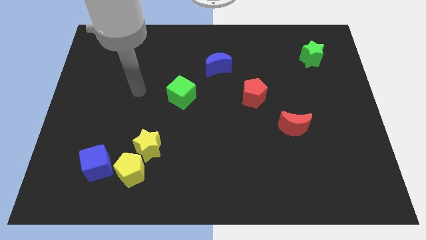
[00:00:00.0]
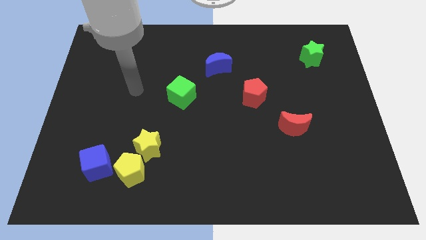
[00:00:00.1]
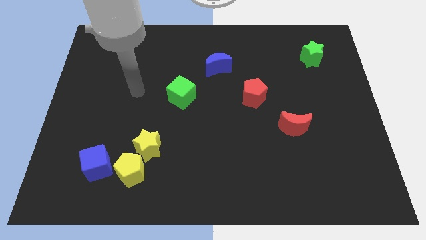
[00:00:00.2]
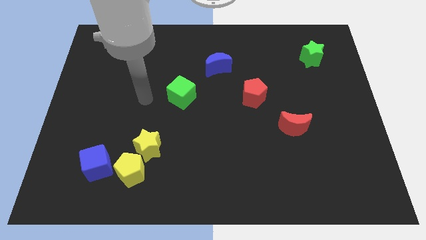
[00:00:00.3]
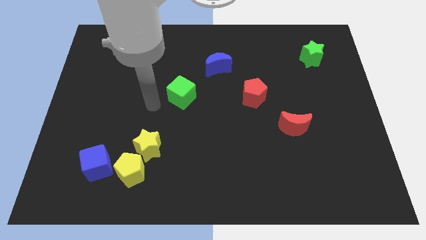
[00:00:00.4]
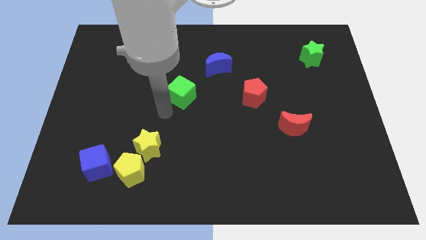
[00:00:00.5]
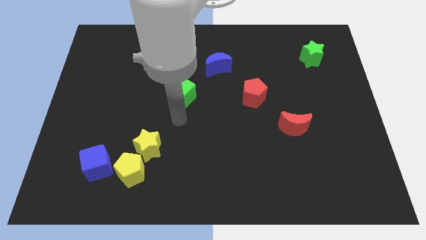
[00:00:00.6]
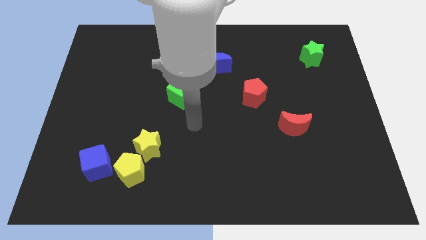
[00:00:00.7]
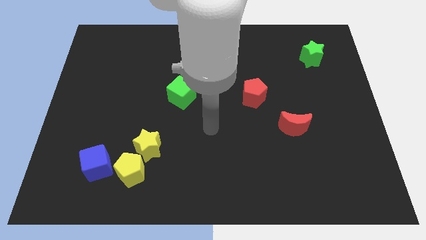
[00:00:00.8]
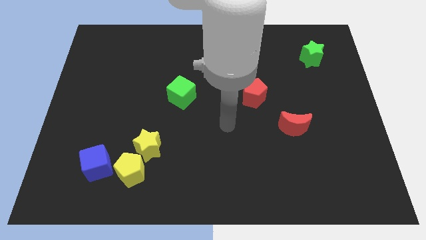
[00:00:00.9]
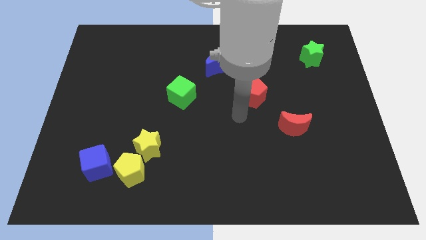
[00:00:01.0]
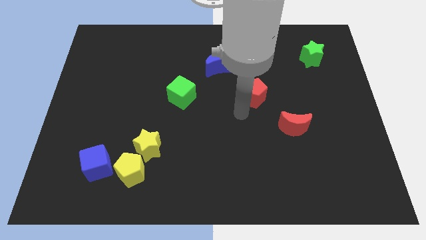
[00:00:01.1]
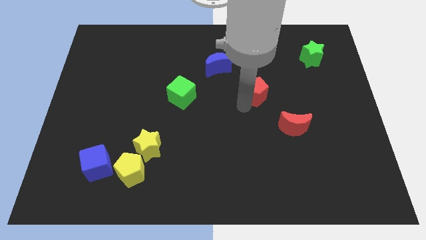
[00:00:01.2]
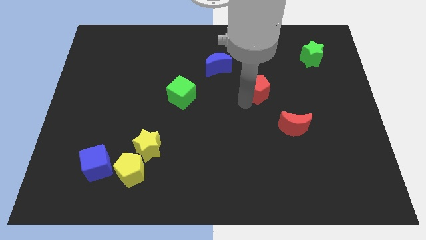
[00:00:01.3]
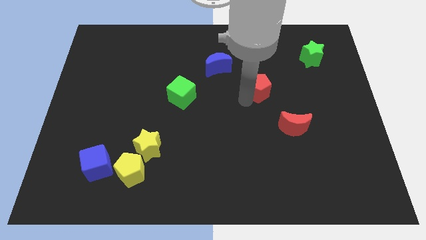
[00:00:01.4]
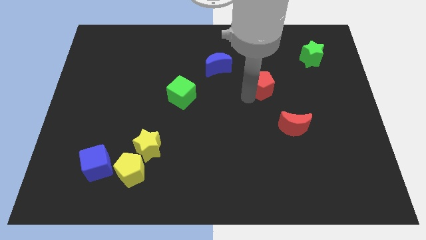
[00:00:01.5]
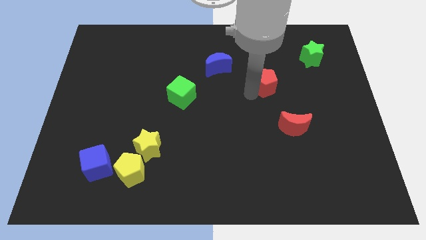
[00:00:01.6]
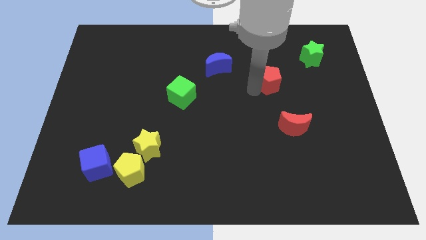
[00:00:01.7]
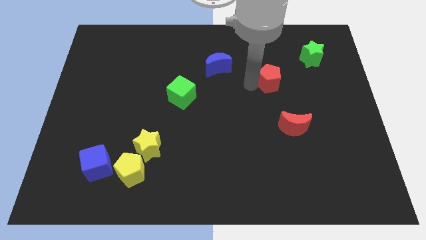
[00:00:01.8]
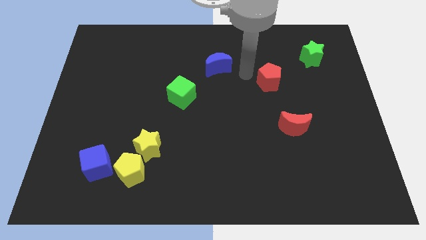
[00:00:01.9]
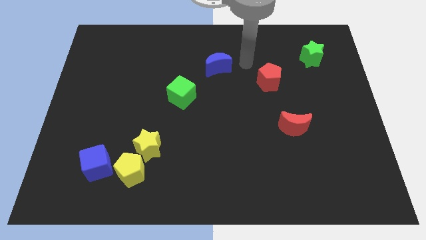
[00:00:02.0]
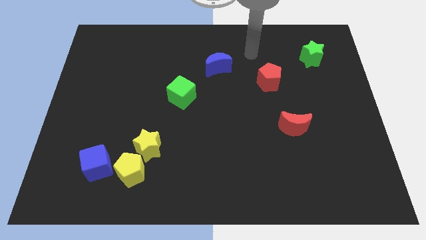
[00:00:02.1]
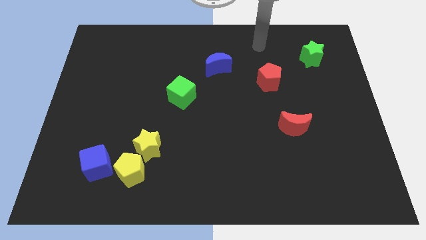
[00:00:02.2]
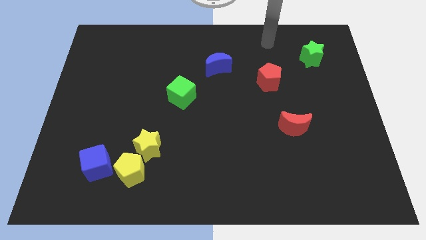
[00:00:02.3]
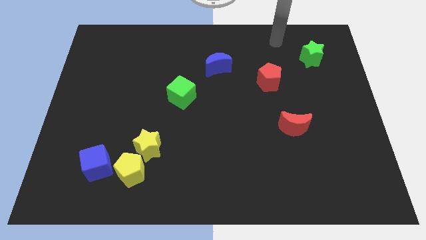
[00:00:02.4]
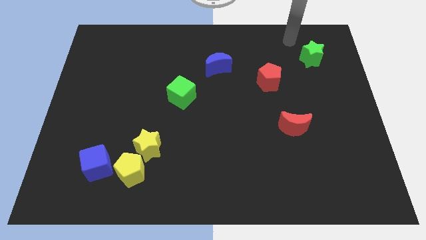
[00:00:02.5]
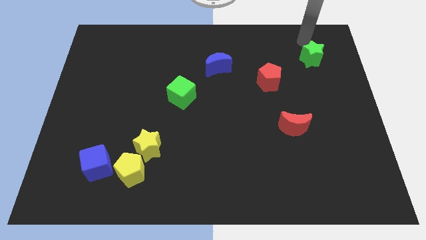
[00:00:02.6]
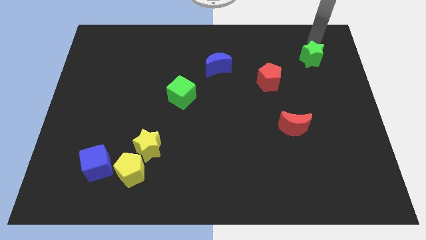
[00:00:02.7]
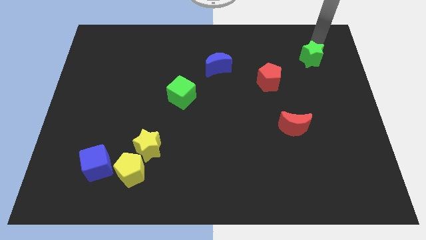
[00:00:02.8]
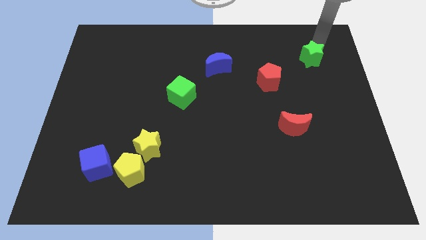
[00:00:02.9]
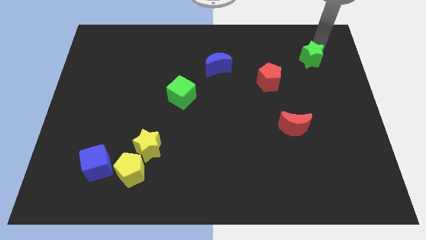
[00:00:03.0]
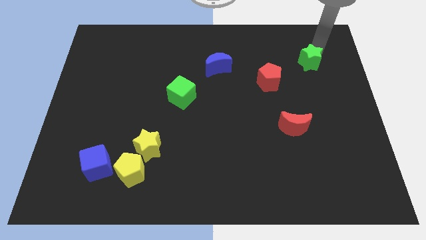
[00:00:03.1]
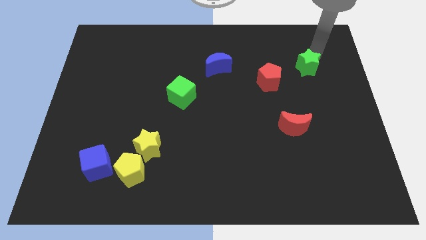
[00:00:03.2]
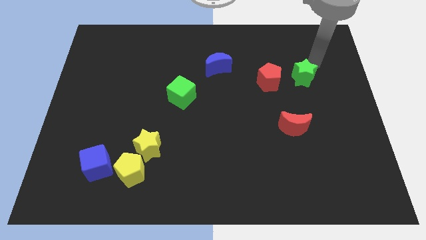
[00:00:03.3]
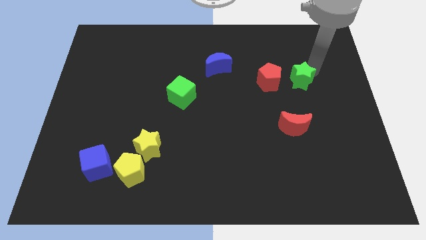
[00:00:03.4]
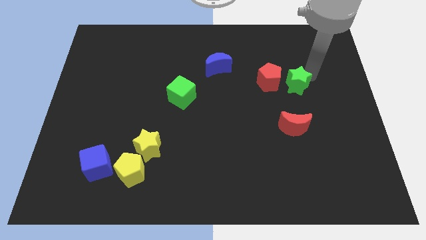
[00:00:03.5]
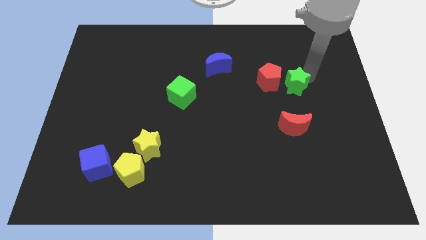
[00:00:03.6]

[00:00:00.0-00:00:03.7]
place green star to the right of red pentagon

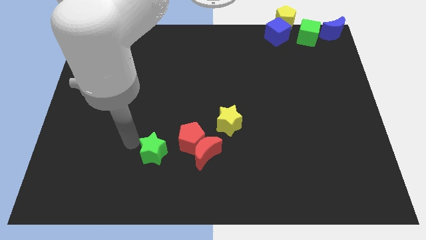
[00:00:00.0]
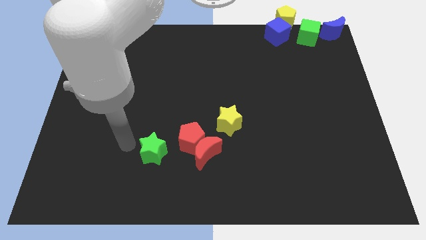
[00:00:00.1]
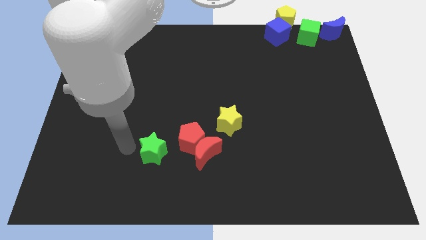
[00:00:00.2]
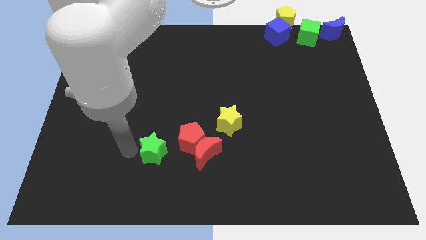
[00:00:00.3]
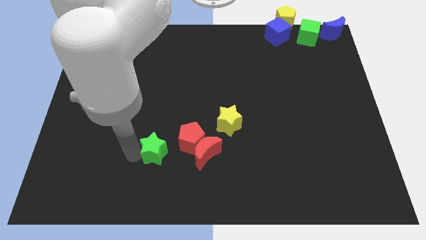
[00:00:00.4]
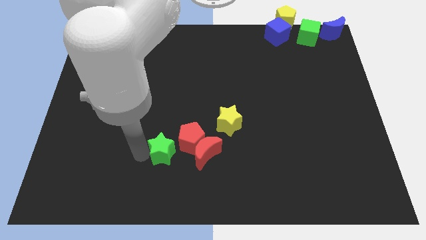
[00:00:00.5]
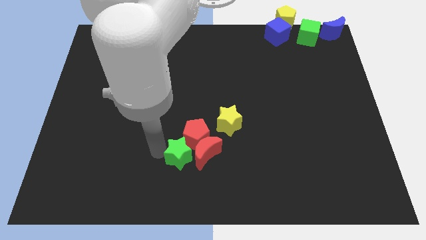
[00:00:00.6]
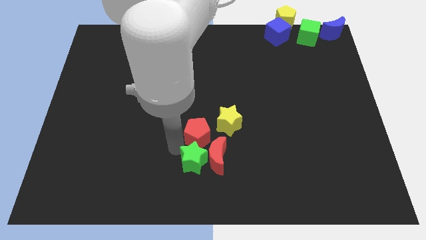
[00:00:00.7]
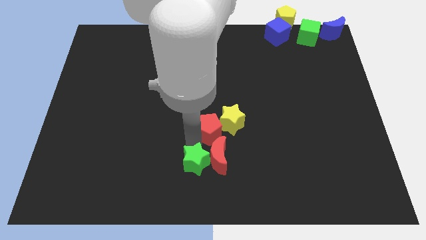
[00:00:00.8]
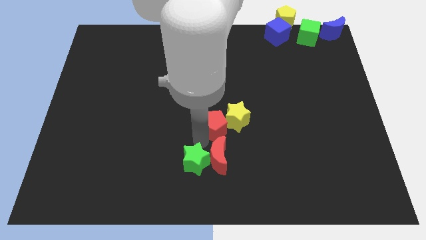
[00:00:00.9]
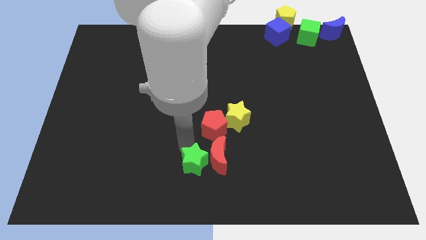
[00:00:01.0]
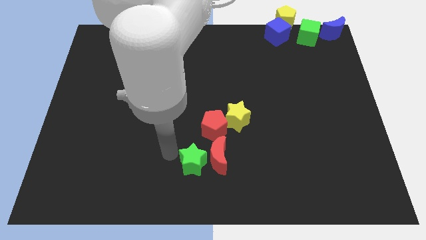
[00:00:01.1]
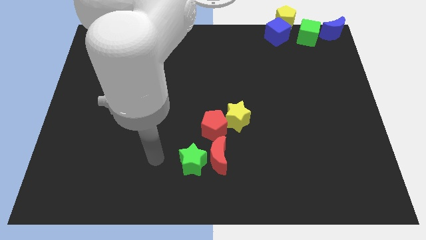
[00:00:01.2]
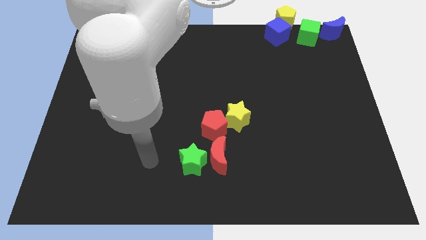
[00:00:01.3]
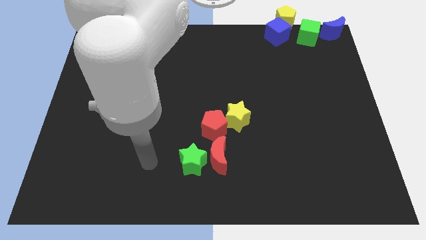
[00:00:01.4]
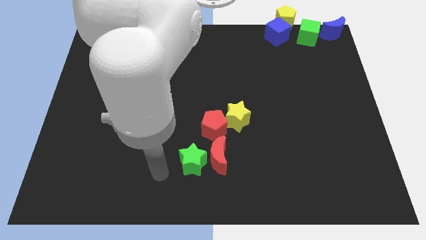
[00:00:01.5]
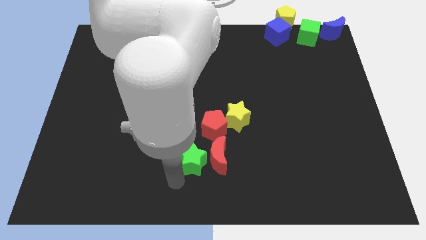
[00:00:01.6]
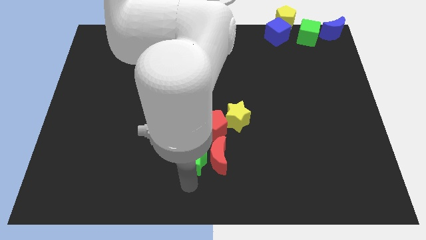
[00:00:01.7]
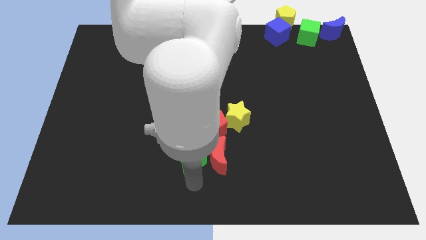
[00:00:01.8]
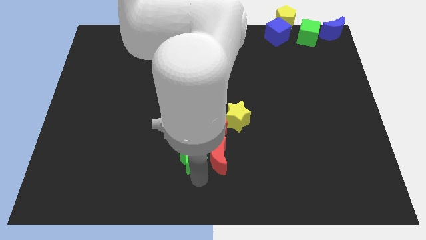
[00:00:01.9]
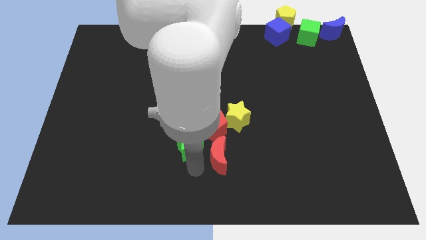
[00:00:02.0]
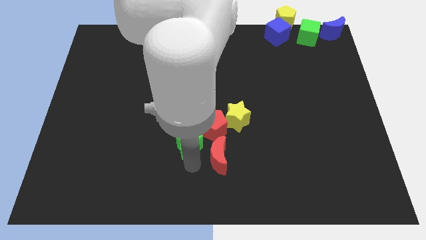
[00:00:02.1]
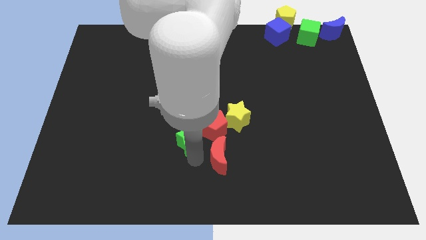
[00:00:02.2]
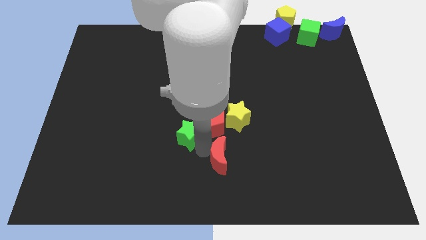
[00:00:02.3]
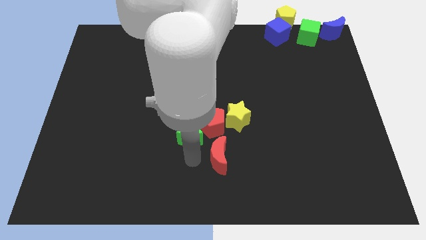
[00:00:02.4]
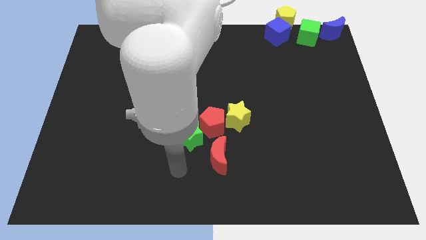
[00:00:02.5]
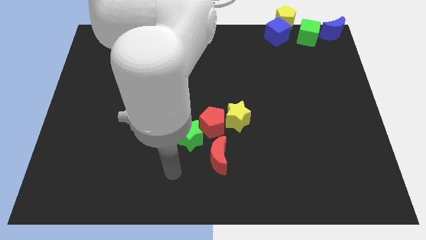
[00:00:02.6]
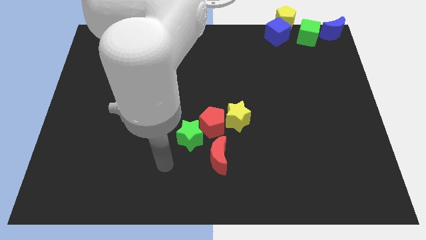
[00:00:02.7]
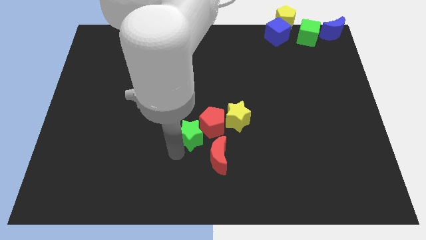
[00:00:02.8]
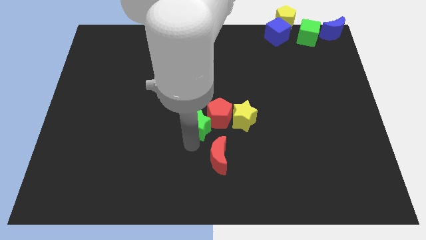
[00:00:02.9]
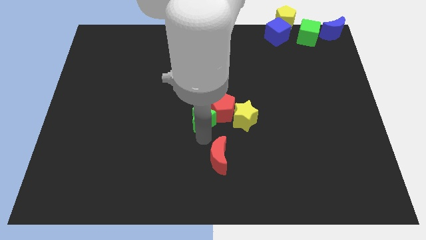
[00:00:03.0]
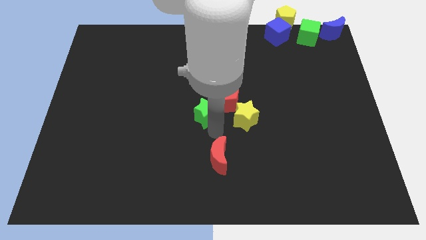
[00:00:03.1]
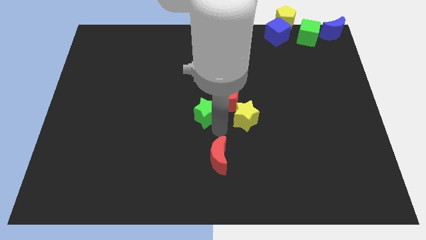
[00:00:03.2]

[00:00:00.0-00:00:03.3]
move the green star into the red pentagon

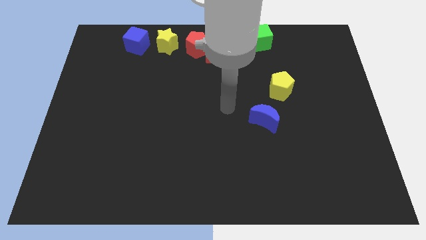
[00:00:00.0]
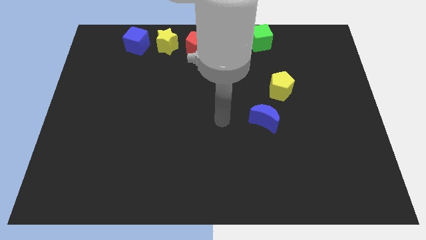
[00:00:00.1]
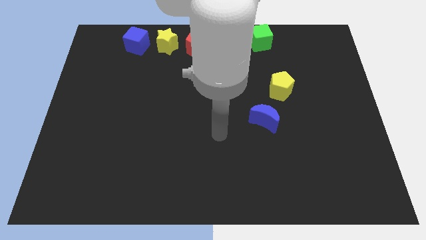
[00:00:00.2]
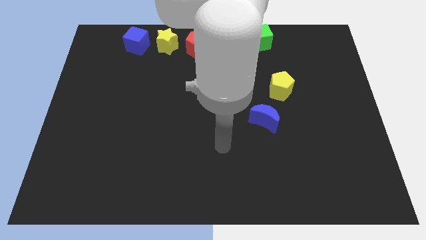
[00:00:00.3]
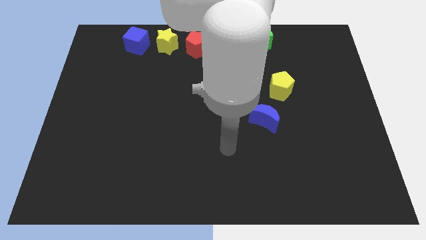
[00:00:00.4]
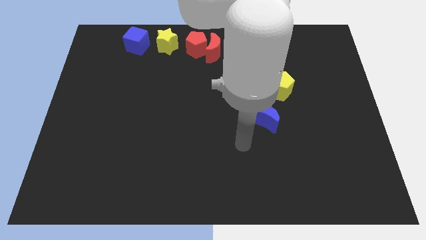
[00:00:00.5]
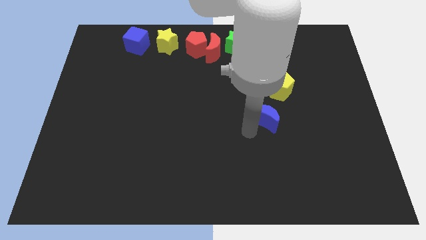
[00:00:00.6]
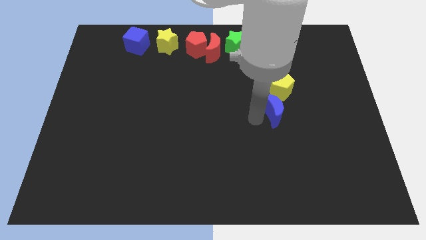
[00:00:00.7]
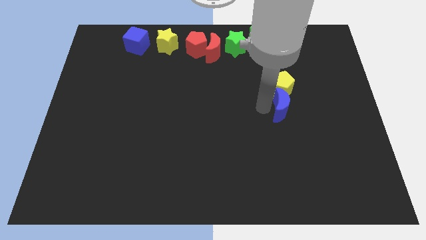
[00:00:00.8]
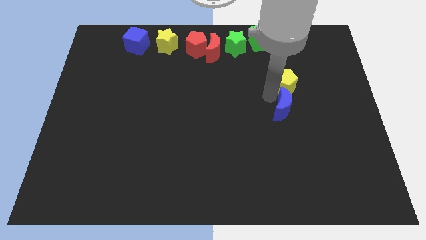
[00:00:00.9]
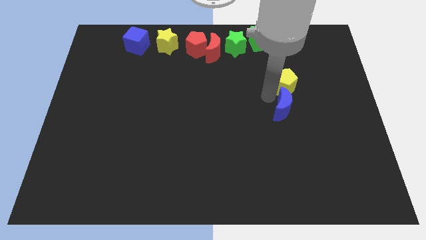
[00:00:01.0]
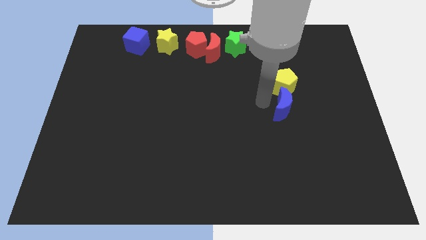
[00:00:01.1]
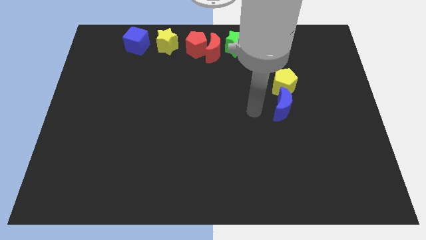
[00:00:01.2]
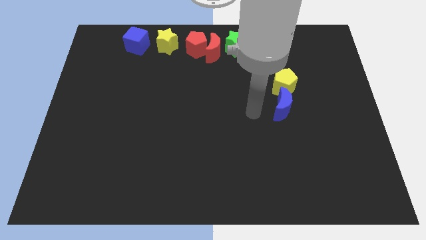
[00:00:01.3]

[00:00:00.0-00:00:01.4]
push blue crescent into yellow pentagon

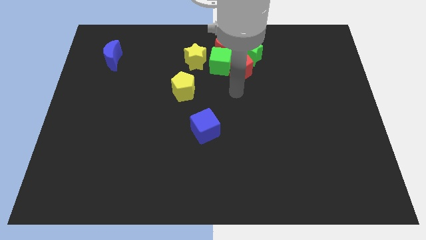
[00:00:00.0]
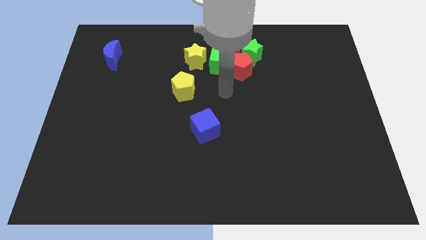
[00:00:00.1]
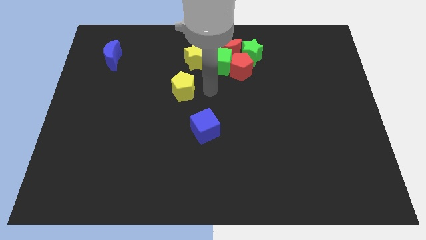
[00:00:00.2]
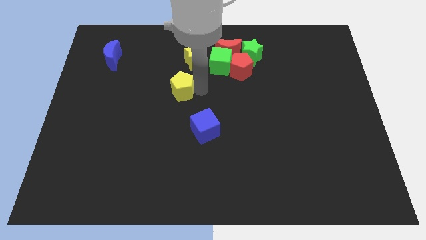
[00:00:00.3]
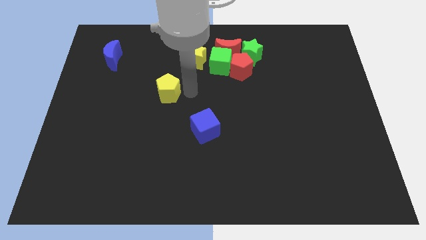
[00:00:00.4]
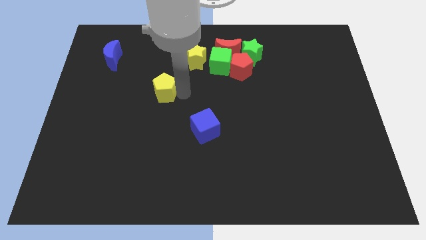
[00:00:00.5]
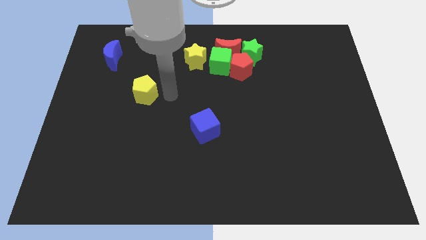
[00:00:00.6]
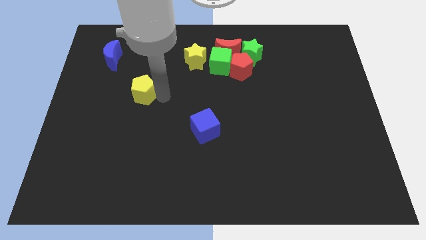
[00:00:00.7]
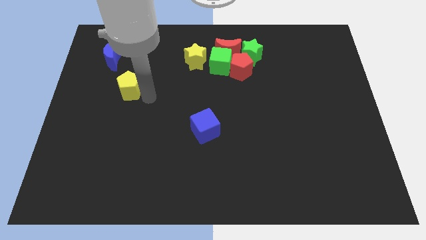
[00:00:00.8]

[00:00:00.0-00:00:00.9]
push the yellow pentagon towards the left side of the board
